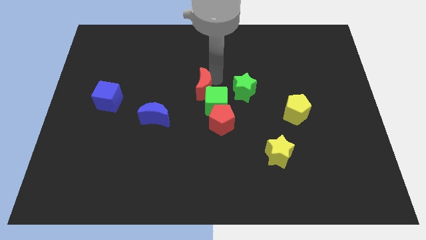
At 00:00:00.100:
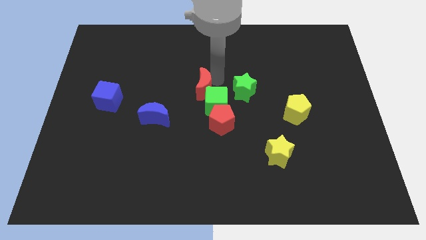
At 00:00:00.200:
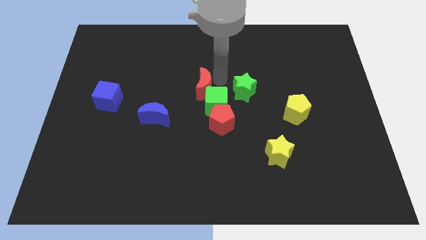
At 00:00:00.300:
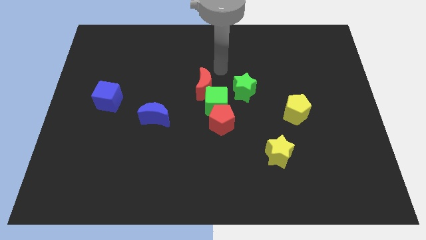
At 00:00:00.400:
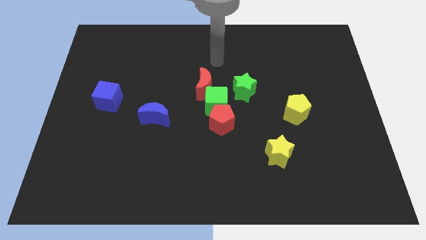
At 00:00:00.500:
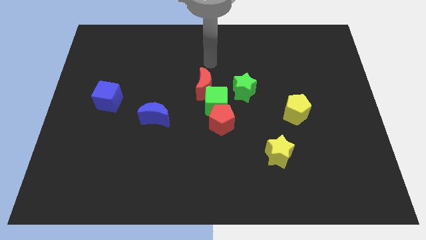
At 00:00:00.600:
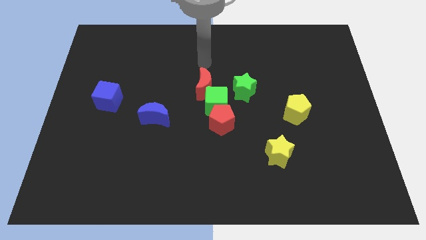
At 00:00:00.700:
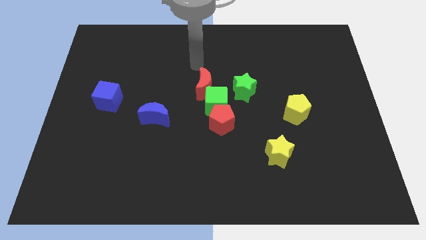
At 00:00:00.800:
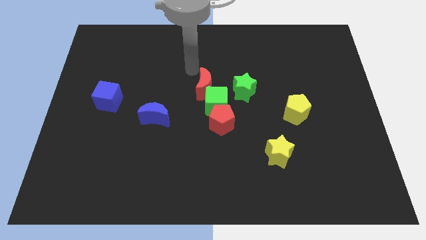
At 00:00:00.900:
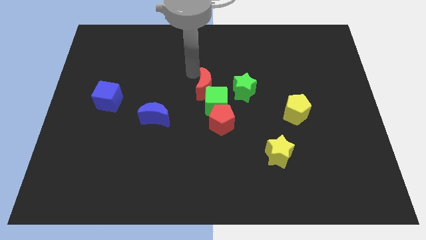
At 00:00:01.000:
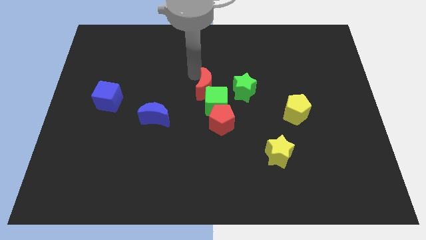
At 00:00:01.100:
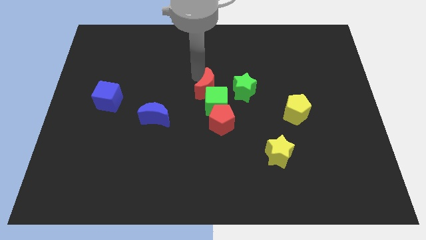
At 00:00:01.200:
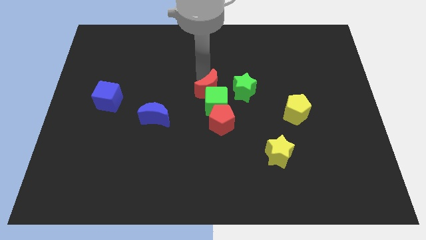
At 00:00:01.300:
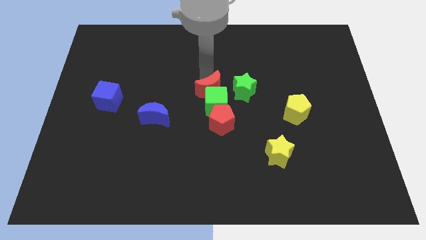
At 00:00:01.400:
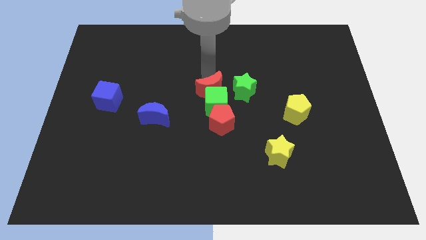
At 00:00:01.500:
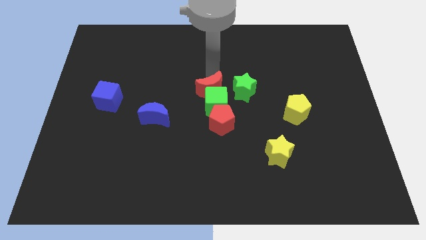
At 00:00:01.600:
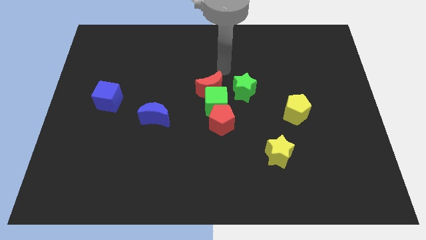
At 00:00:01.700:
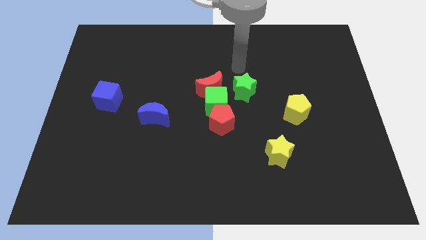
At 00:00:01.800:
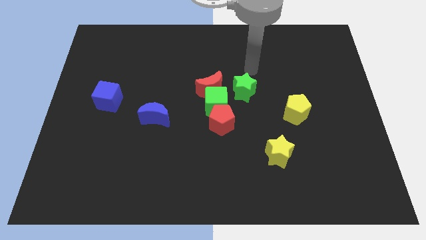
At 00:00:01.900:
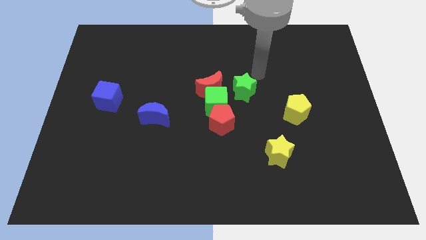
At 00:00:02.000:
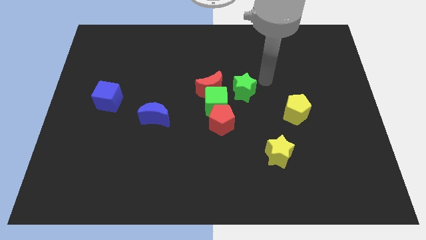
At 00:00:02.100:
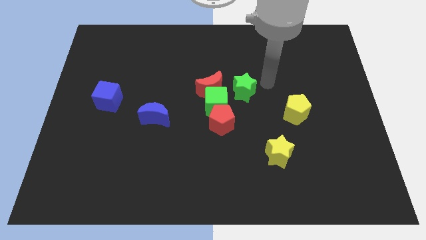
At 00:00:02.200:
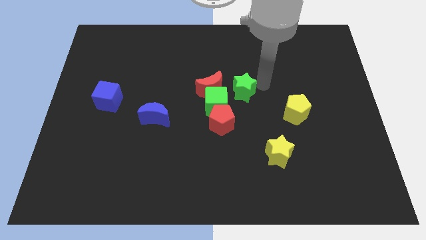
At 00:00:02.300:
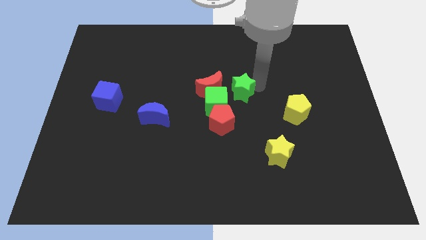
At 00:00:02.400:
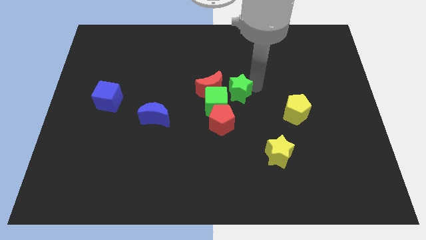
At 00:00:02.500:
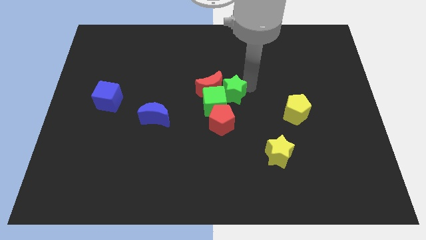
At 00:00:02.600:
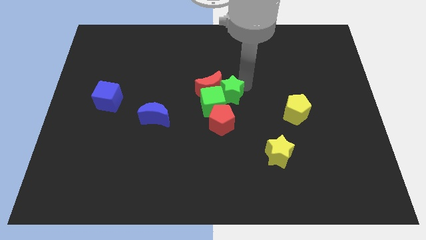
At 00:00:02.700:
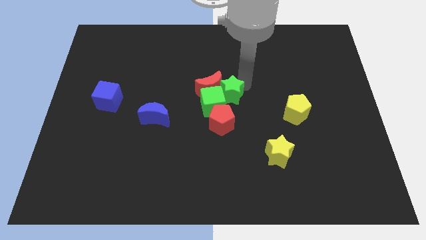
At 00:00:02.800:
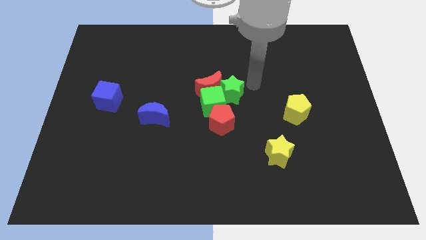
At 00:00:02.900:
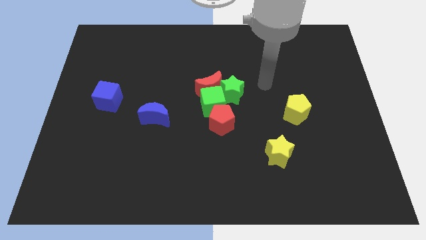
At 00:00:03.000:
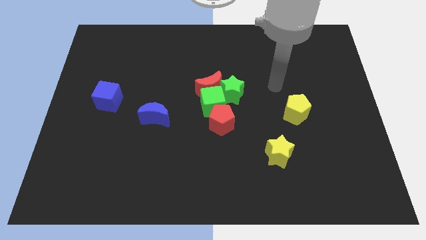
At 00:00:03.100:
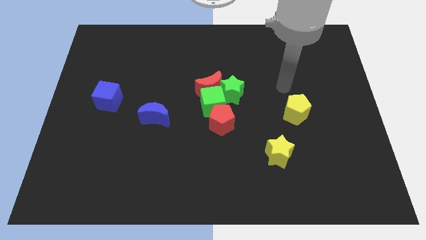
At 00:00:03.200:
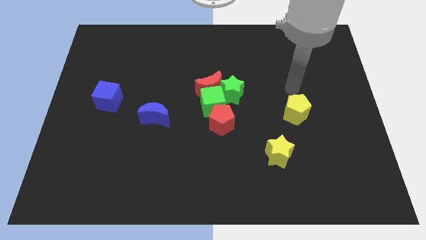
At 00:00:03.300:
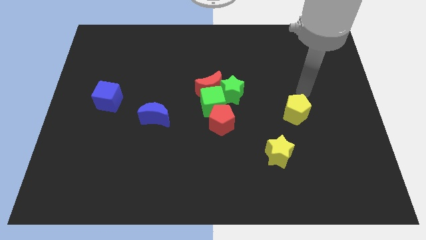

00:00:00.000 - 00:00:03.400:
move the green star right of green cube

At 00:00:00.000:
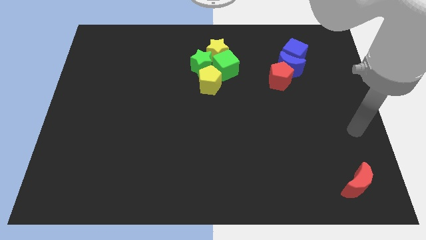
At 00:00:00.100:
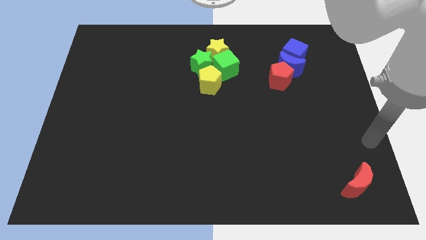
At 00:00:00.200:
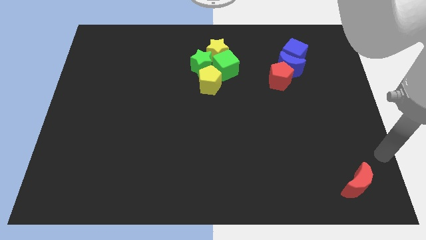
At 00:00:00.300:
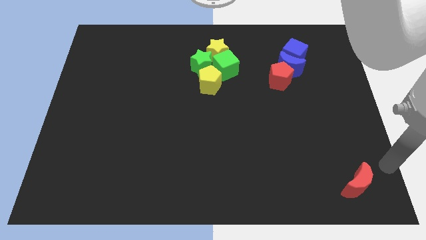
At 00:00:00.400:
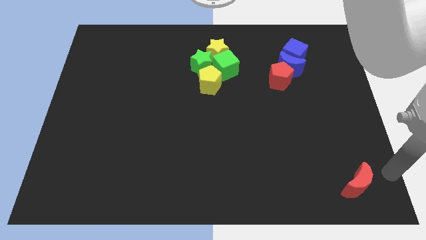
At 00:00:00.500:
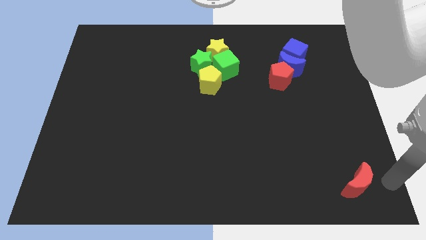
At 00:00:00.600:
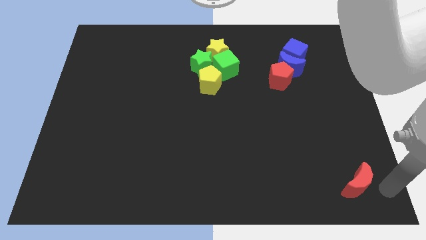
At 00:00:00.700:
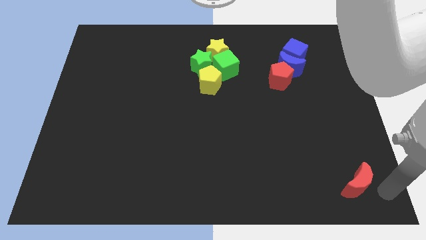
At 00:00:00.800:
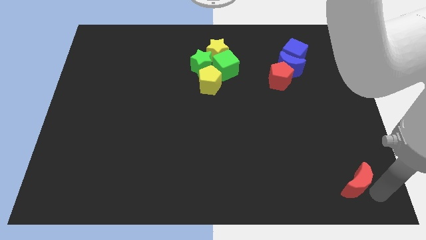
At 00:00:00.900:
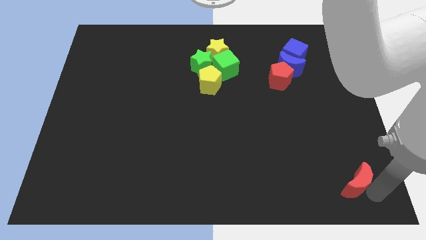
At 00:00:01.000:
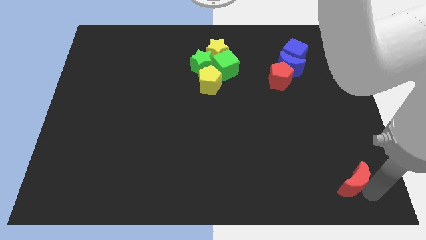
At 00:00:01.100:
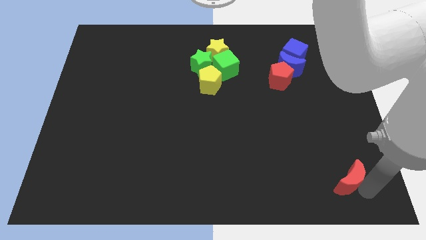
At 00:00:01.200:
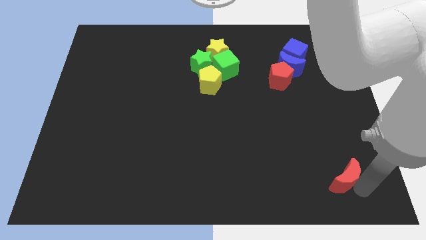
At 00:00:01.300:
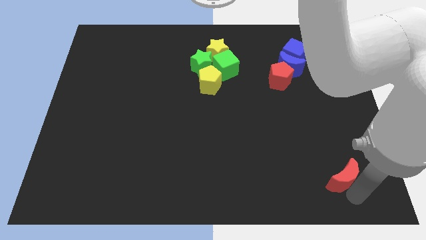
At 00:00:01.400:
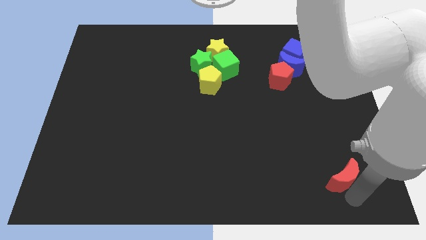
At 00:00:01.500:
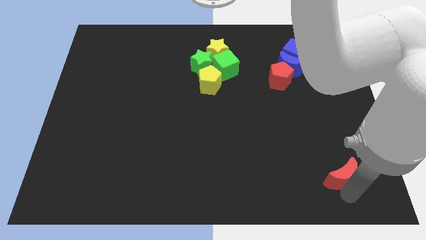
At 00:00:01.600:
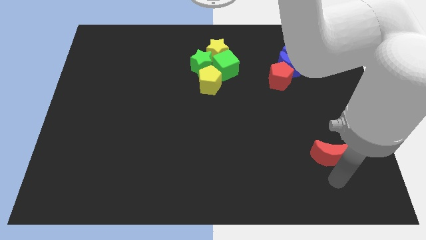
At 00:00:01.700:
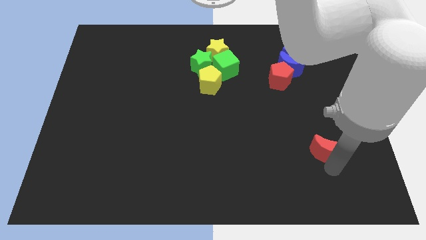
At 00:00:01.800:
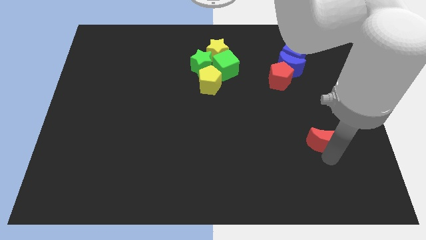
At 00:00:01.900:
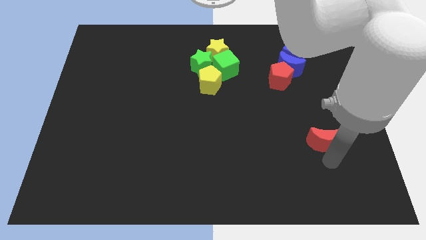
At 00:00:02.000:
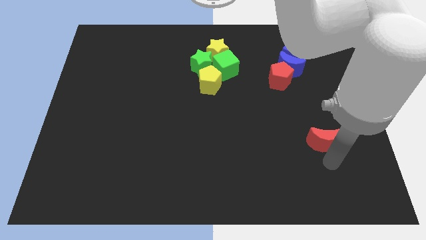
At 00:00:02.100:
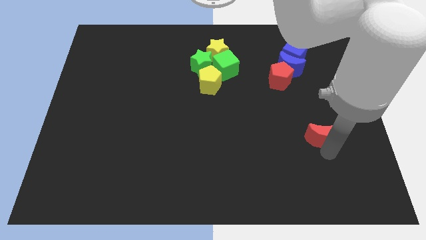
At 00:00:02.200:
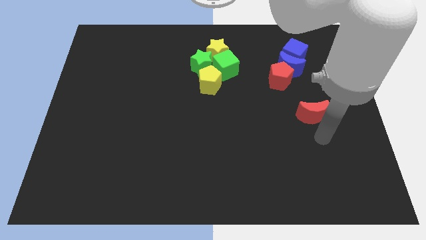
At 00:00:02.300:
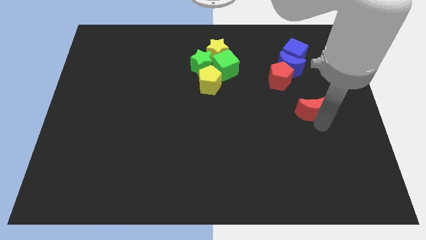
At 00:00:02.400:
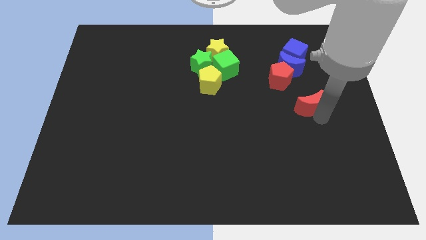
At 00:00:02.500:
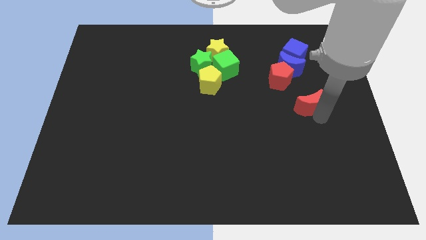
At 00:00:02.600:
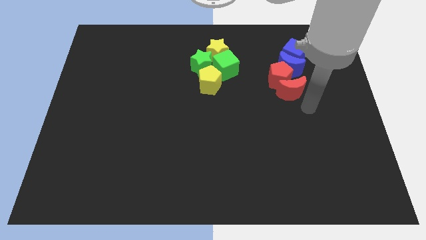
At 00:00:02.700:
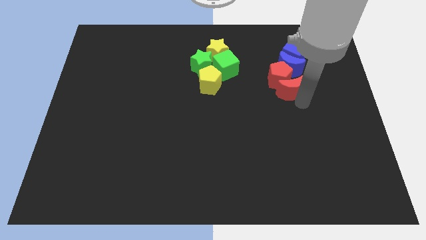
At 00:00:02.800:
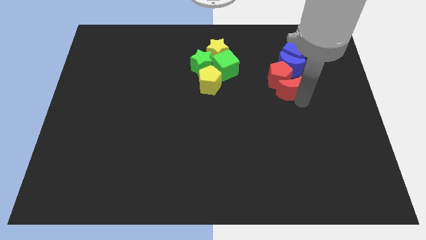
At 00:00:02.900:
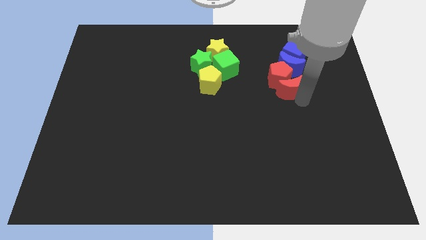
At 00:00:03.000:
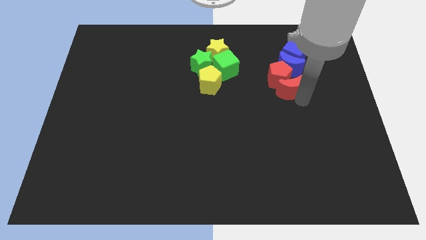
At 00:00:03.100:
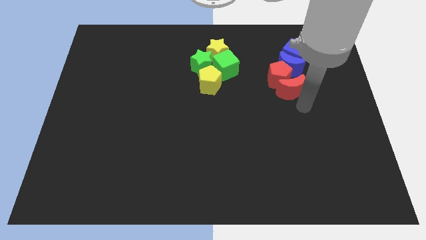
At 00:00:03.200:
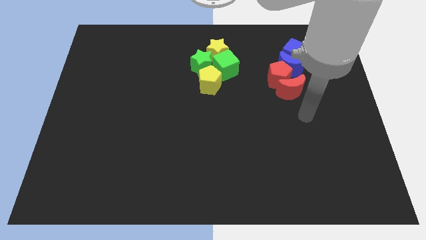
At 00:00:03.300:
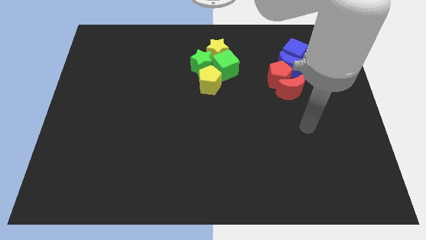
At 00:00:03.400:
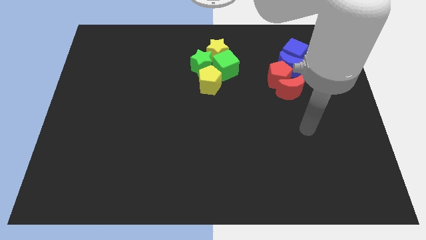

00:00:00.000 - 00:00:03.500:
move the red crescent below the red pentagon

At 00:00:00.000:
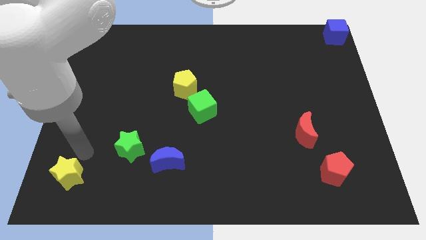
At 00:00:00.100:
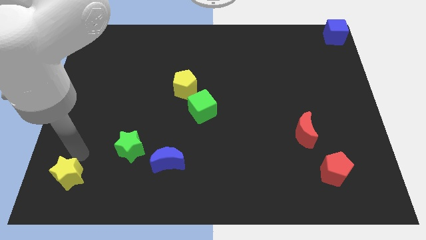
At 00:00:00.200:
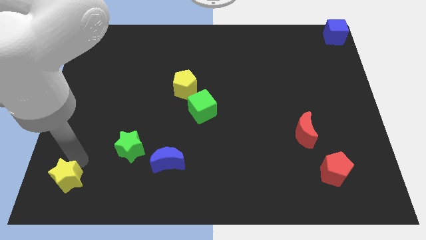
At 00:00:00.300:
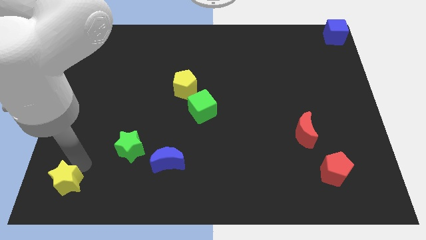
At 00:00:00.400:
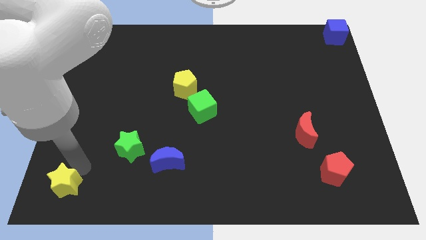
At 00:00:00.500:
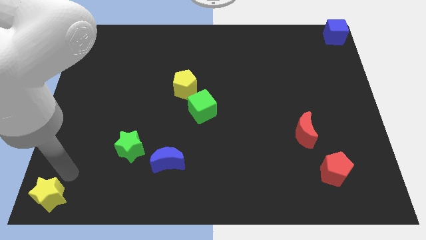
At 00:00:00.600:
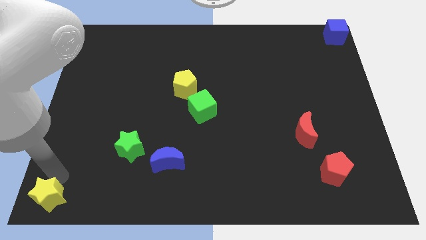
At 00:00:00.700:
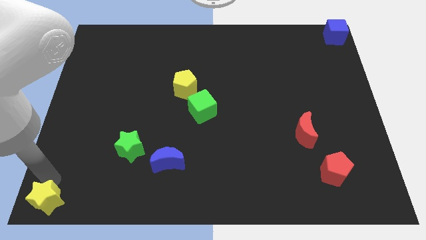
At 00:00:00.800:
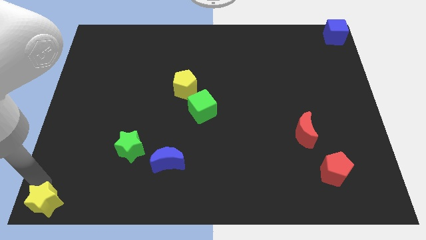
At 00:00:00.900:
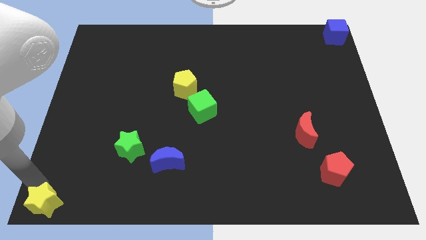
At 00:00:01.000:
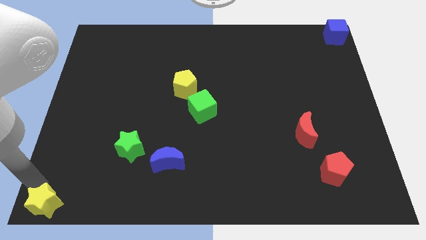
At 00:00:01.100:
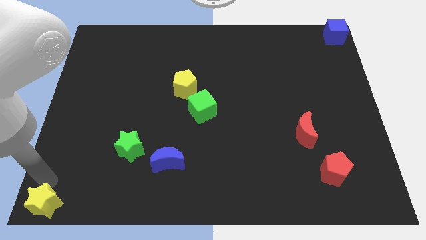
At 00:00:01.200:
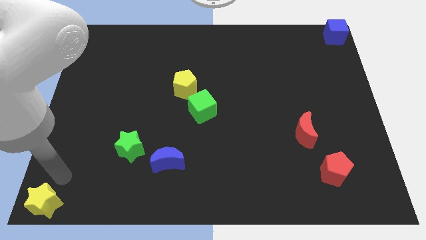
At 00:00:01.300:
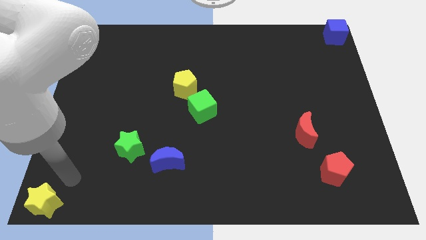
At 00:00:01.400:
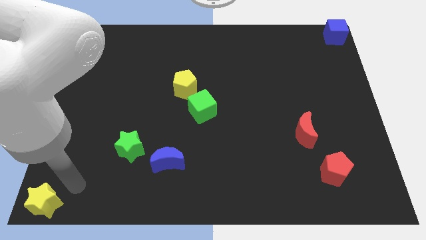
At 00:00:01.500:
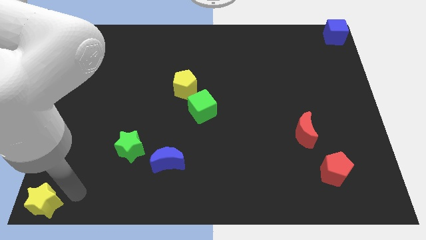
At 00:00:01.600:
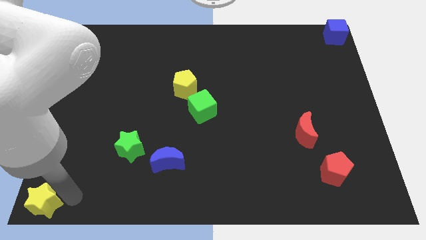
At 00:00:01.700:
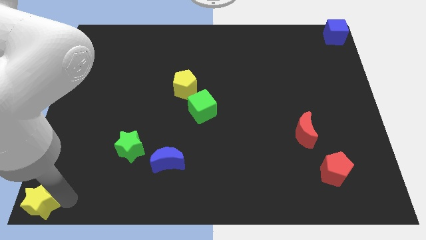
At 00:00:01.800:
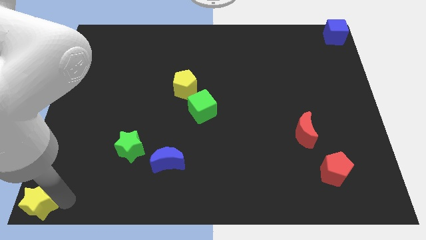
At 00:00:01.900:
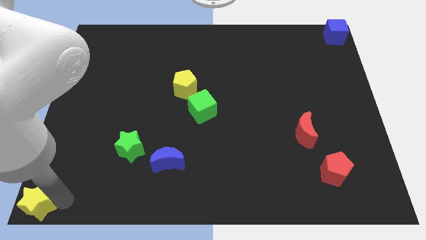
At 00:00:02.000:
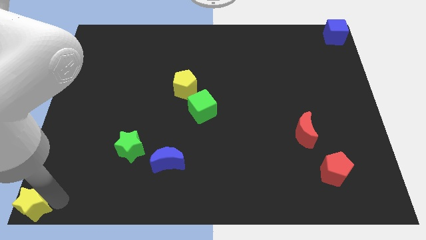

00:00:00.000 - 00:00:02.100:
place the yellow star at the bottom left corner
